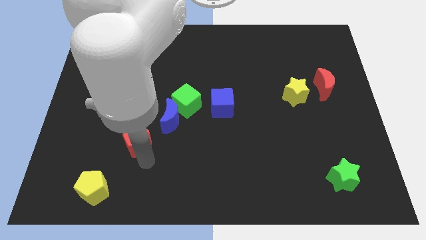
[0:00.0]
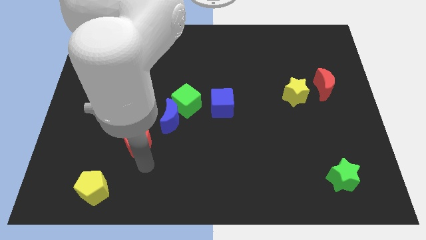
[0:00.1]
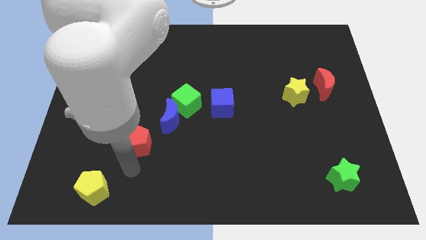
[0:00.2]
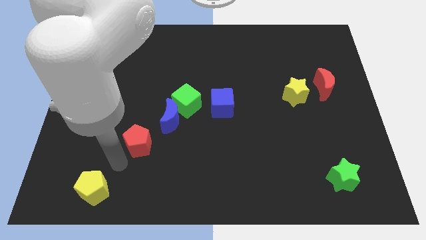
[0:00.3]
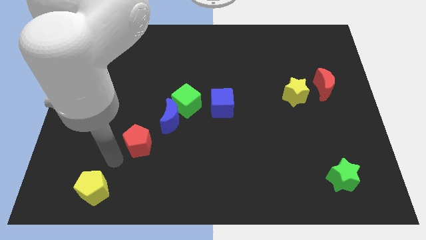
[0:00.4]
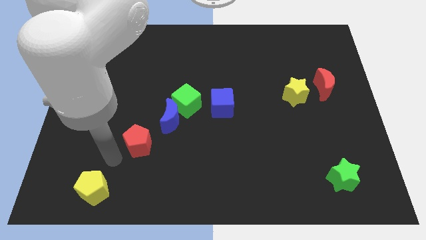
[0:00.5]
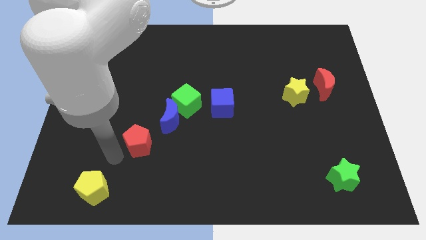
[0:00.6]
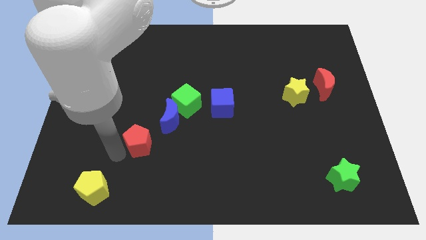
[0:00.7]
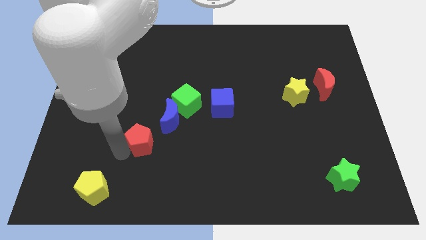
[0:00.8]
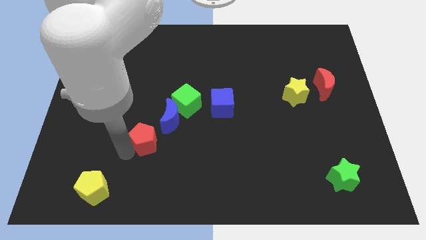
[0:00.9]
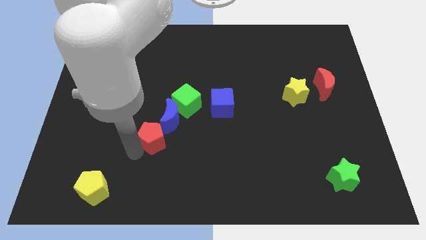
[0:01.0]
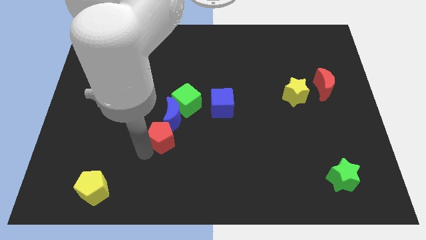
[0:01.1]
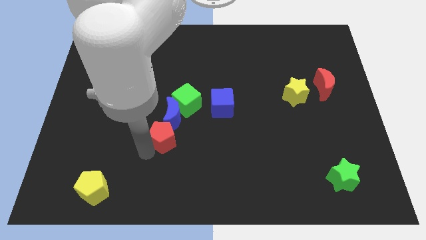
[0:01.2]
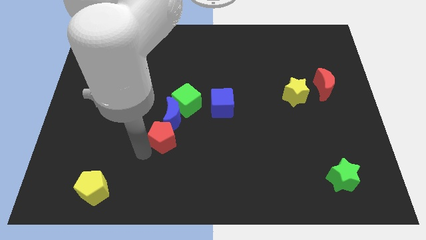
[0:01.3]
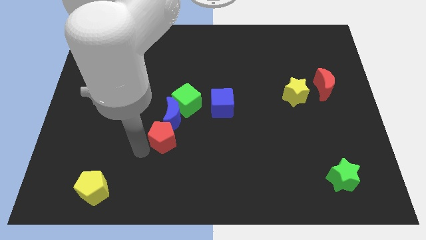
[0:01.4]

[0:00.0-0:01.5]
push red pentagon at the bottom of blue crescent

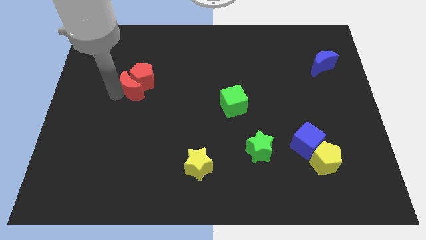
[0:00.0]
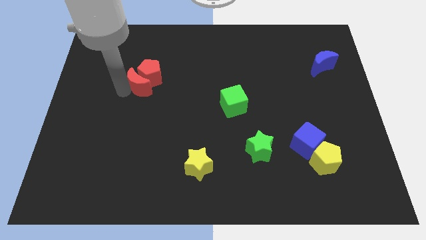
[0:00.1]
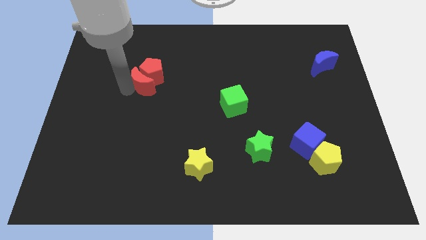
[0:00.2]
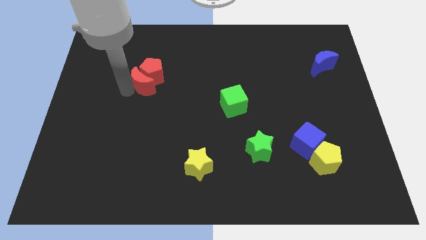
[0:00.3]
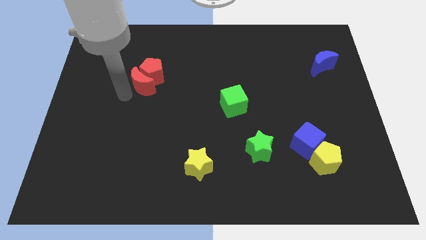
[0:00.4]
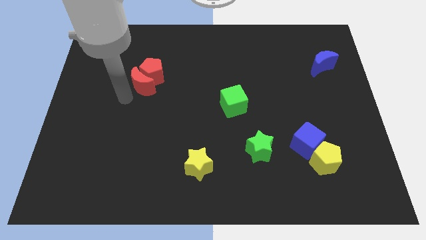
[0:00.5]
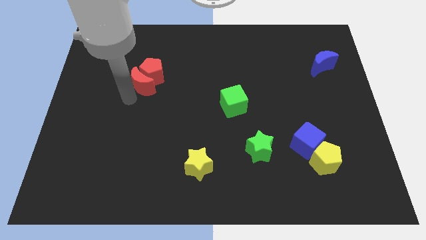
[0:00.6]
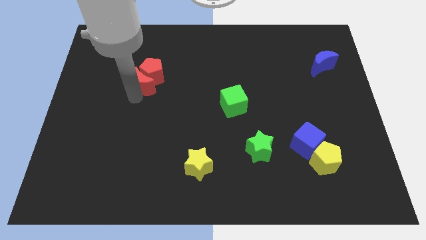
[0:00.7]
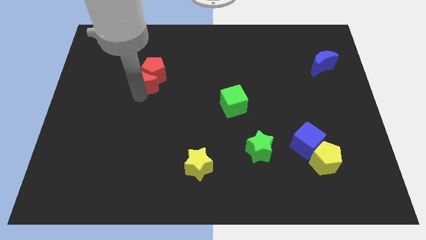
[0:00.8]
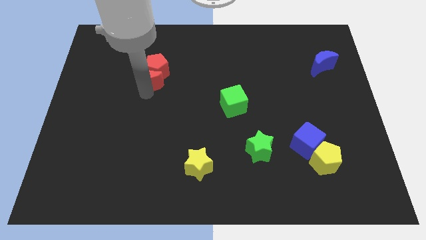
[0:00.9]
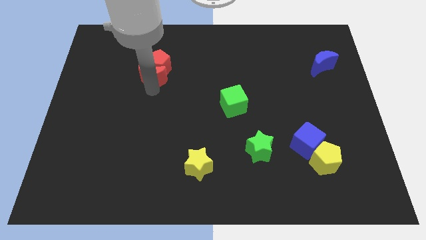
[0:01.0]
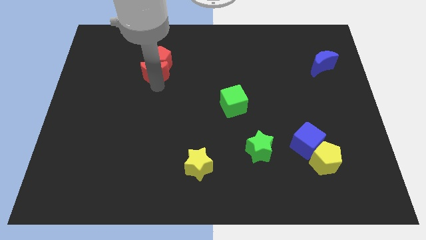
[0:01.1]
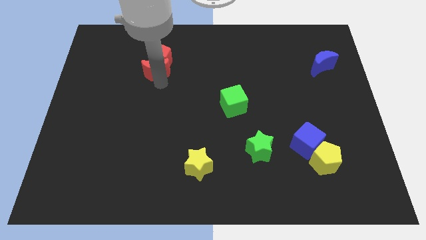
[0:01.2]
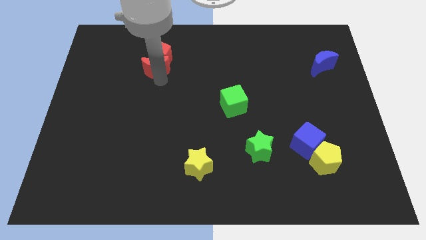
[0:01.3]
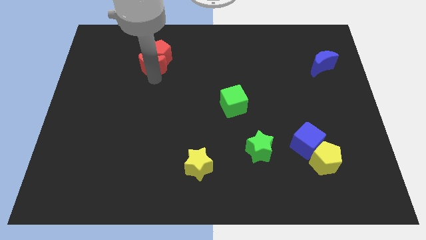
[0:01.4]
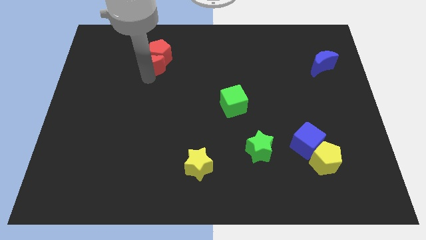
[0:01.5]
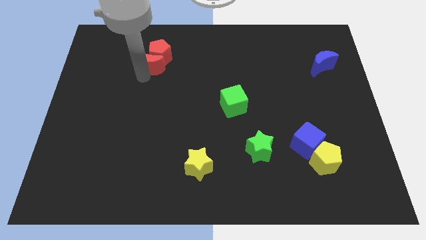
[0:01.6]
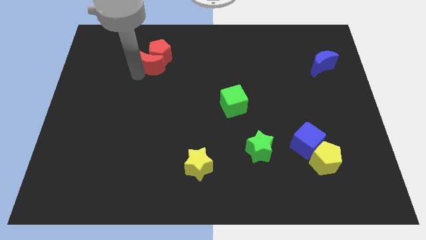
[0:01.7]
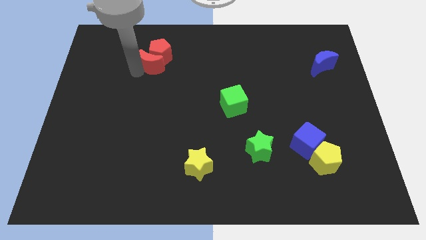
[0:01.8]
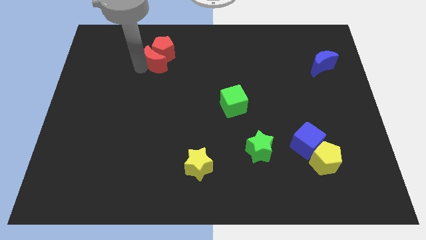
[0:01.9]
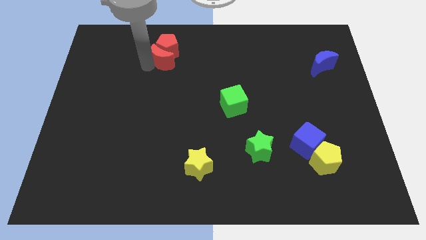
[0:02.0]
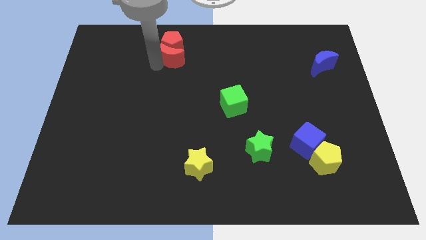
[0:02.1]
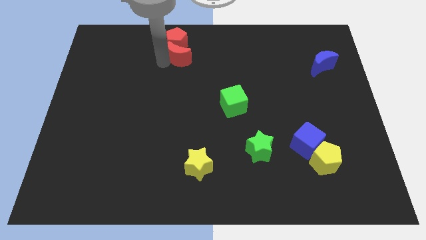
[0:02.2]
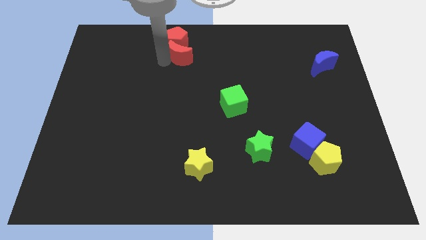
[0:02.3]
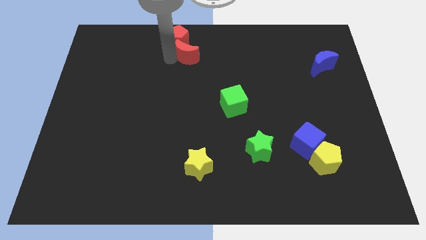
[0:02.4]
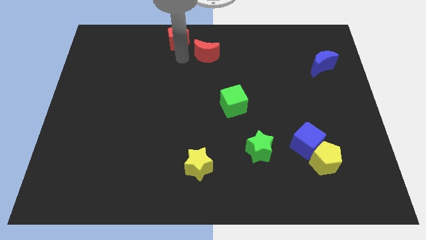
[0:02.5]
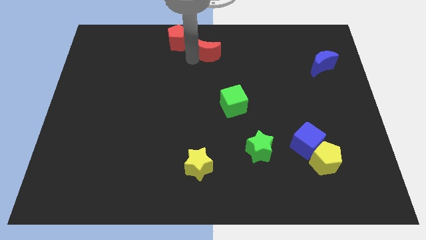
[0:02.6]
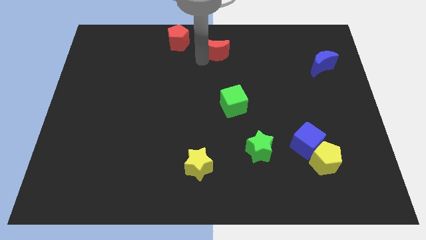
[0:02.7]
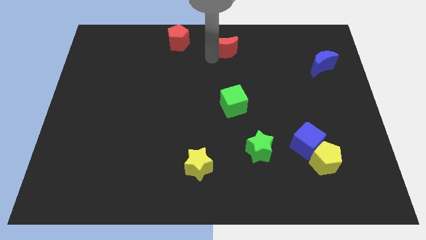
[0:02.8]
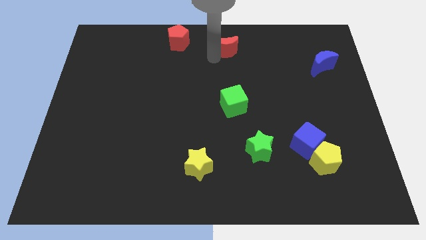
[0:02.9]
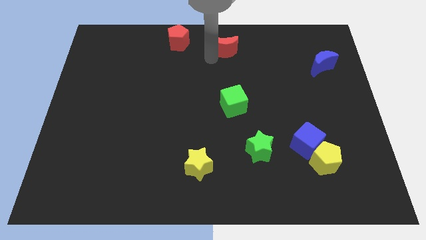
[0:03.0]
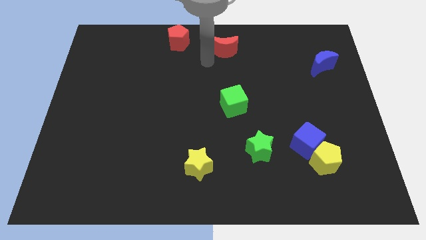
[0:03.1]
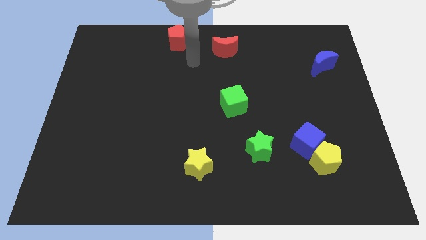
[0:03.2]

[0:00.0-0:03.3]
push red crescent to the top centre of the board

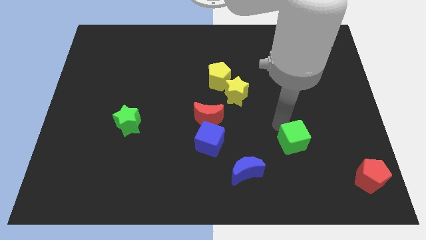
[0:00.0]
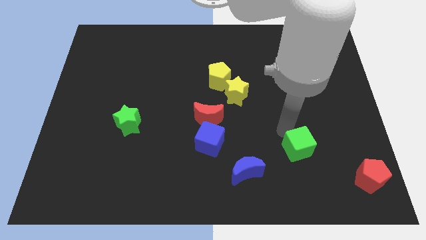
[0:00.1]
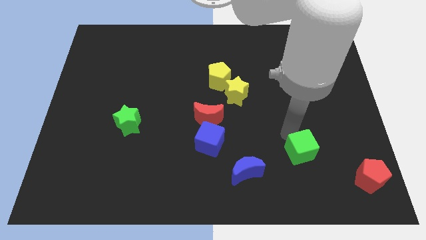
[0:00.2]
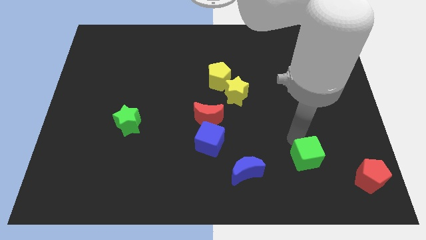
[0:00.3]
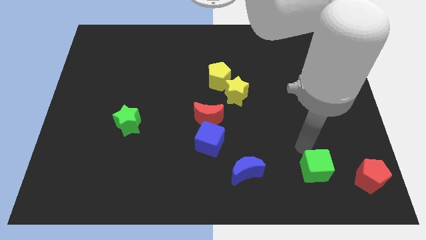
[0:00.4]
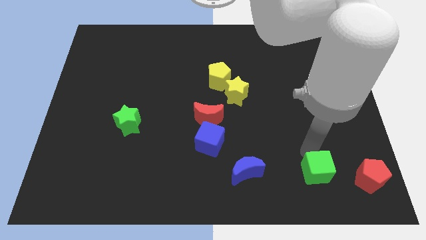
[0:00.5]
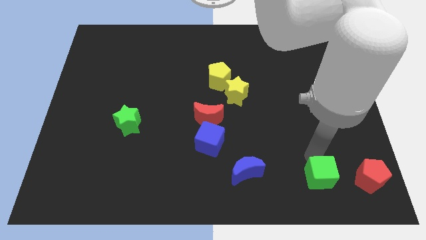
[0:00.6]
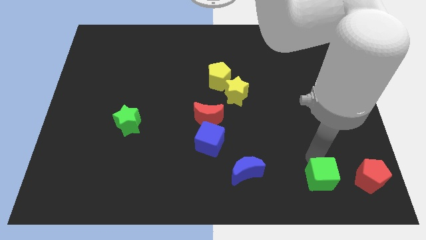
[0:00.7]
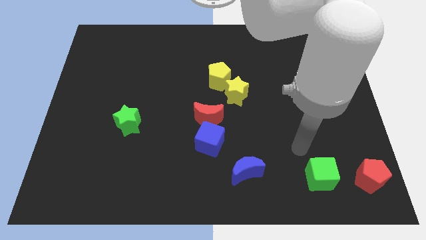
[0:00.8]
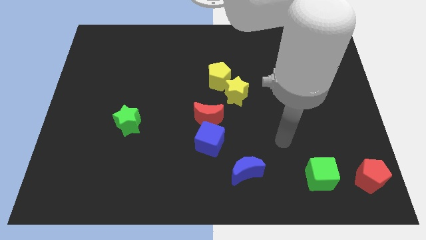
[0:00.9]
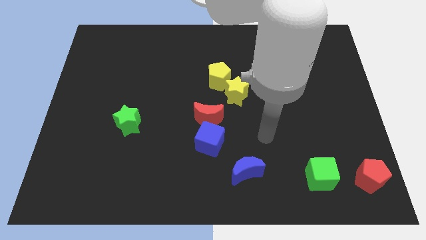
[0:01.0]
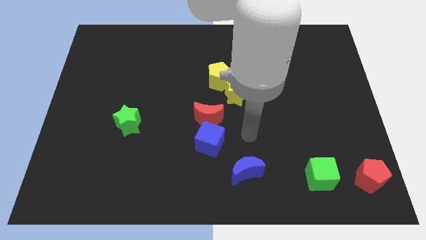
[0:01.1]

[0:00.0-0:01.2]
push the green cube left to the red pentagon

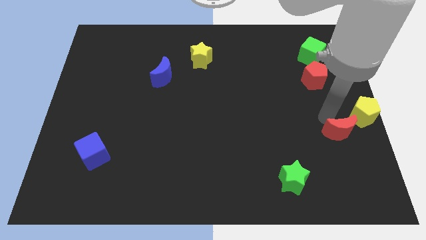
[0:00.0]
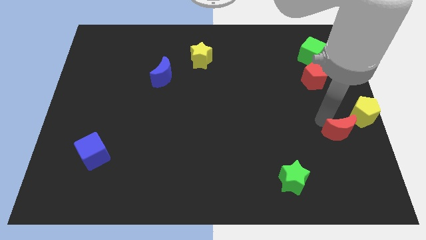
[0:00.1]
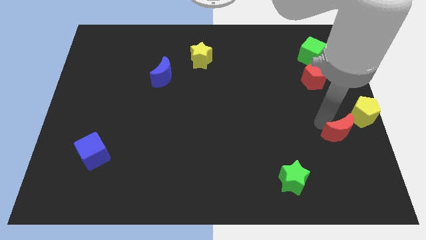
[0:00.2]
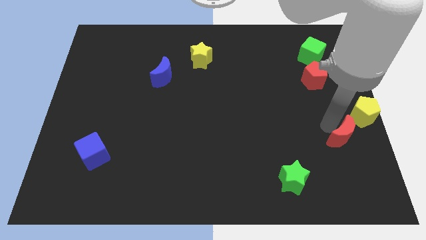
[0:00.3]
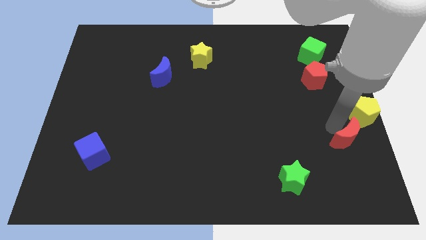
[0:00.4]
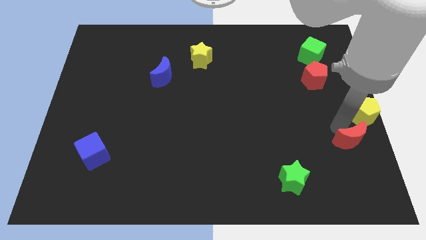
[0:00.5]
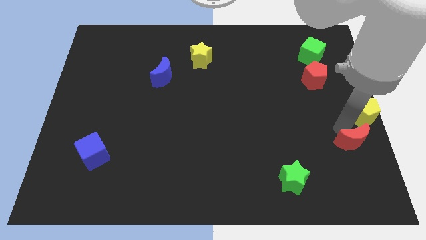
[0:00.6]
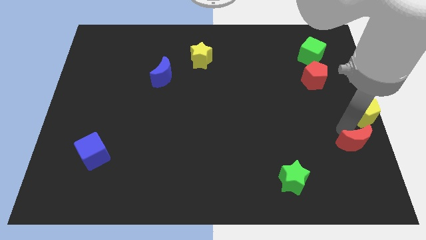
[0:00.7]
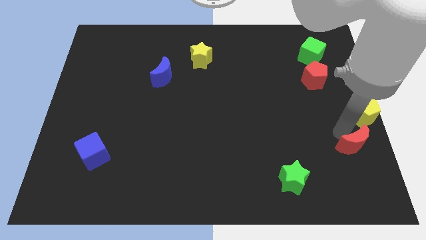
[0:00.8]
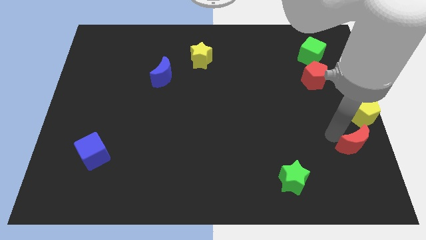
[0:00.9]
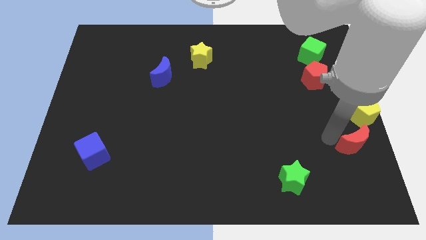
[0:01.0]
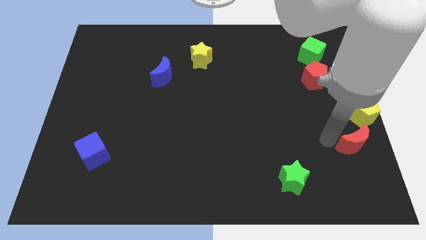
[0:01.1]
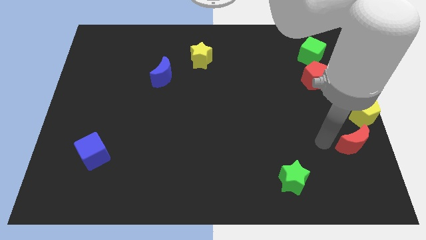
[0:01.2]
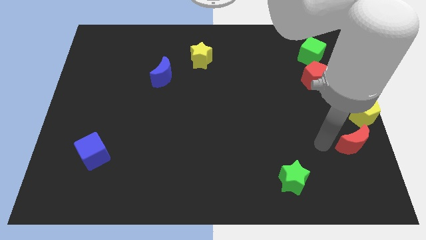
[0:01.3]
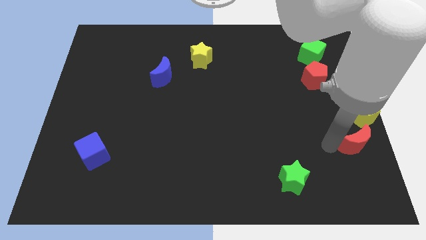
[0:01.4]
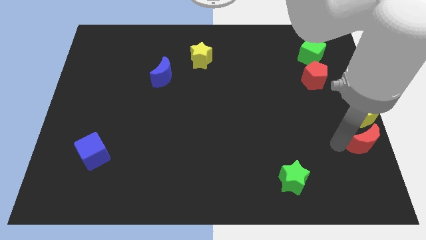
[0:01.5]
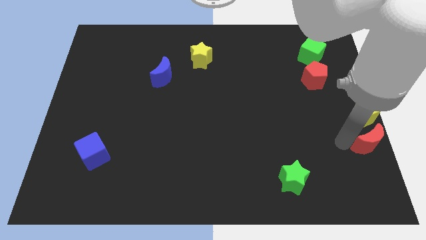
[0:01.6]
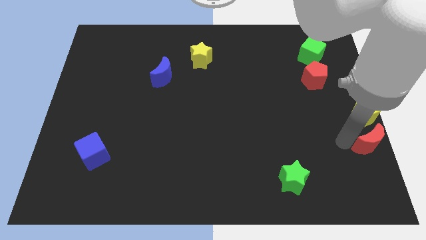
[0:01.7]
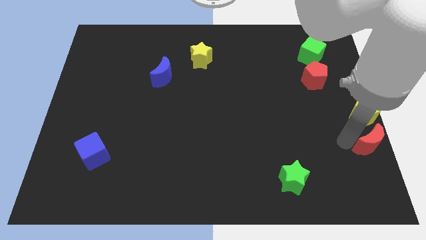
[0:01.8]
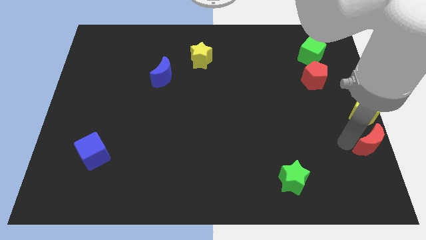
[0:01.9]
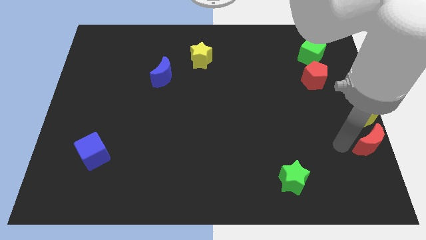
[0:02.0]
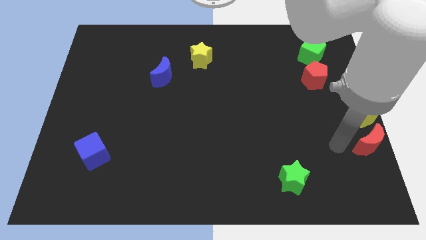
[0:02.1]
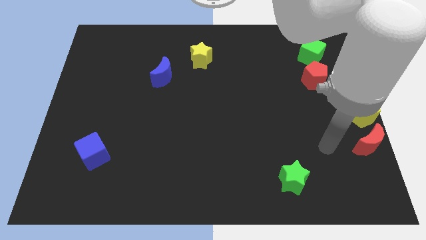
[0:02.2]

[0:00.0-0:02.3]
move the red moon below the yellow pentagon

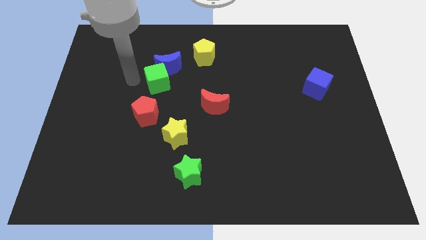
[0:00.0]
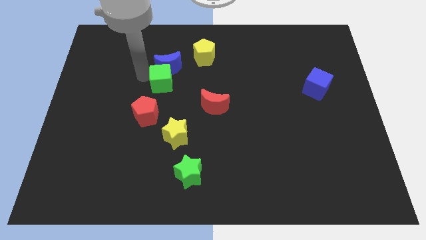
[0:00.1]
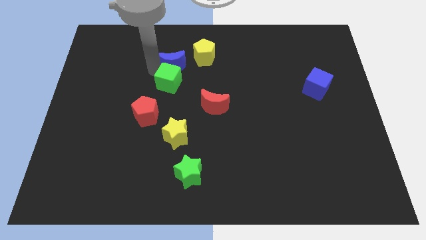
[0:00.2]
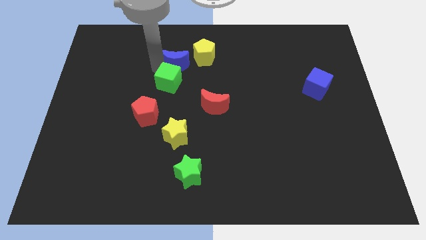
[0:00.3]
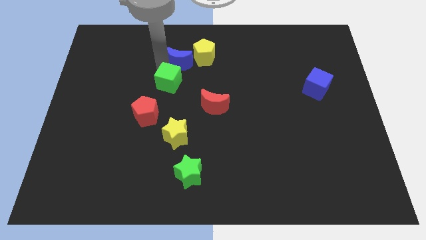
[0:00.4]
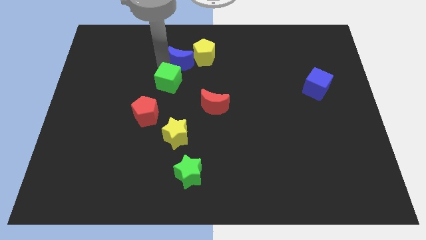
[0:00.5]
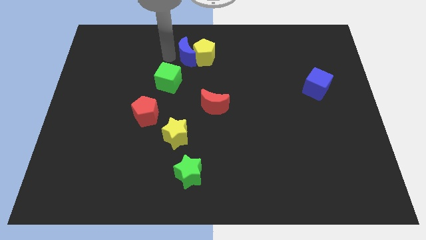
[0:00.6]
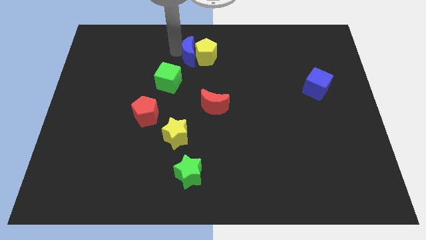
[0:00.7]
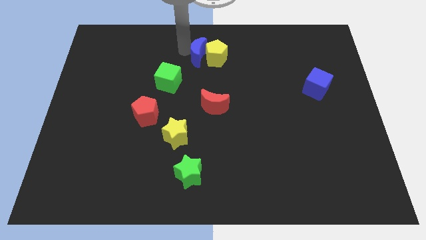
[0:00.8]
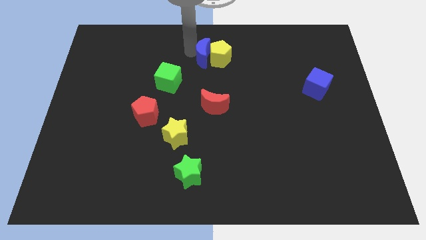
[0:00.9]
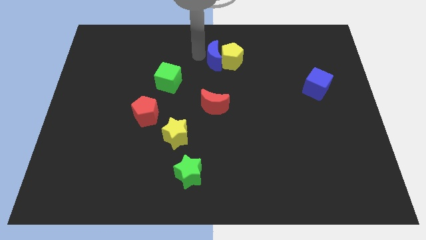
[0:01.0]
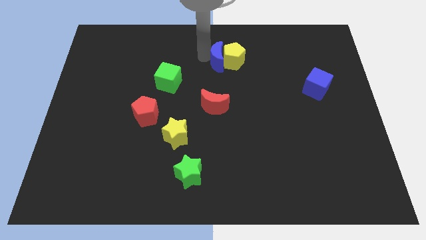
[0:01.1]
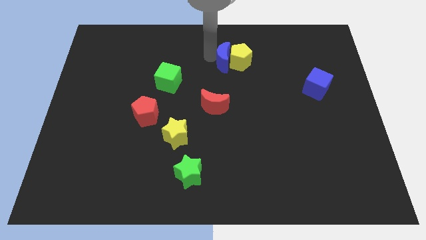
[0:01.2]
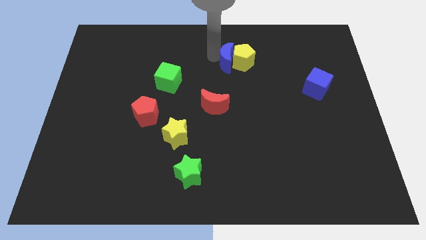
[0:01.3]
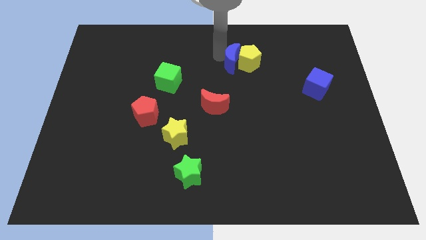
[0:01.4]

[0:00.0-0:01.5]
separate the blue moon from the green cube
